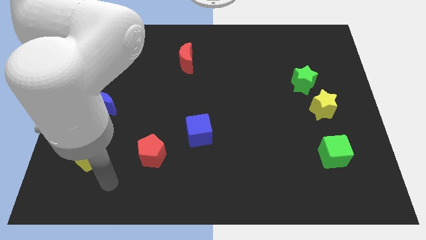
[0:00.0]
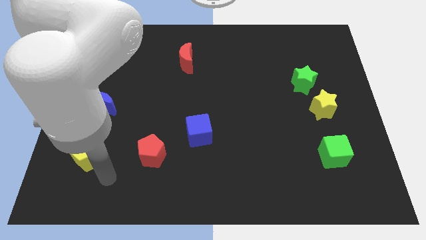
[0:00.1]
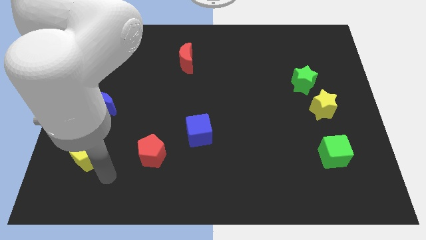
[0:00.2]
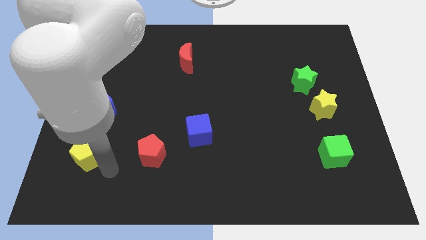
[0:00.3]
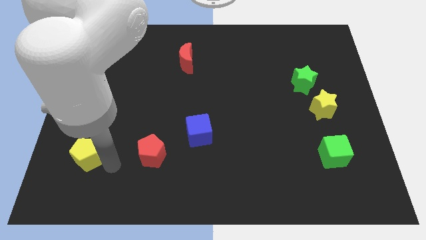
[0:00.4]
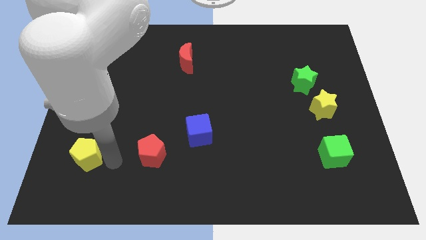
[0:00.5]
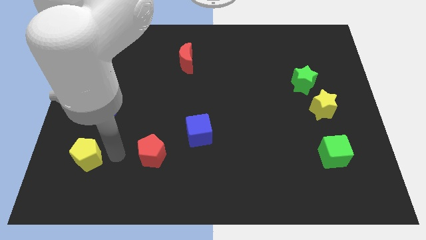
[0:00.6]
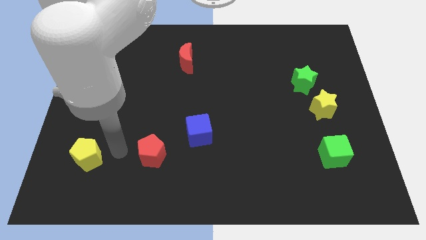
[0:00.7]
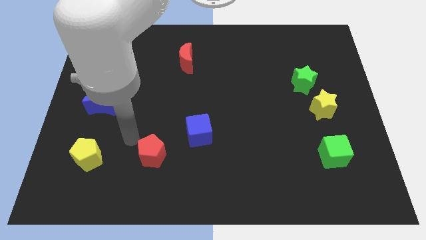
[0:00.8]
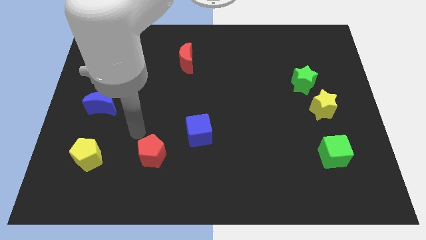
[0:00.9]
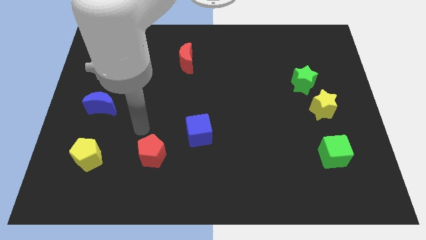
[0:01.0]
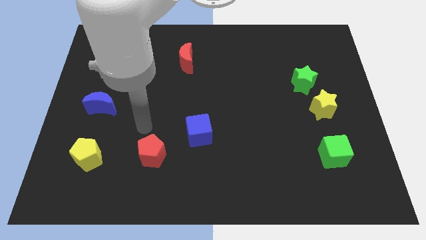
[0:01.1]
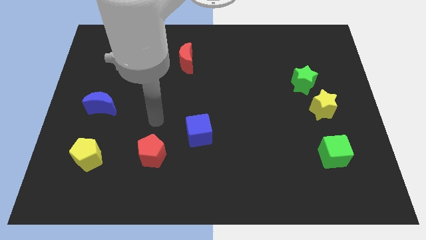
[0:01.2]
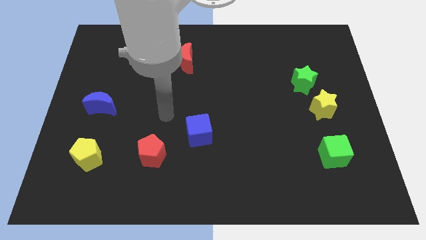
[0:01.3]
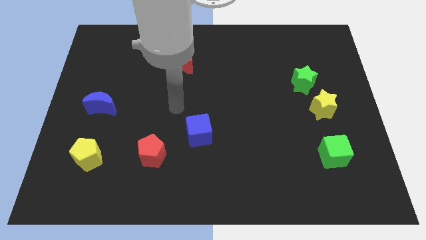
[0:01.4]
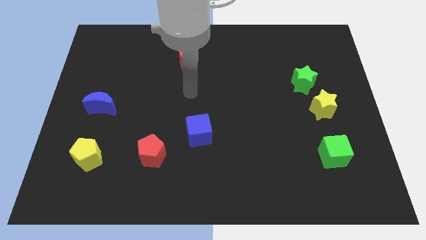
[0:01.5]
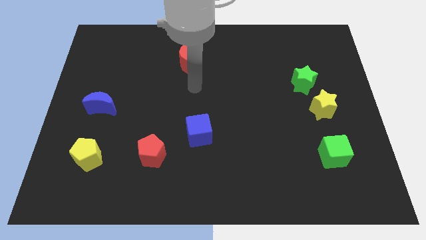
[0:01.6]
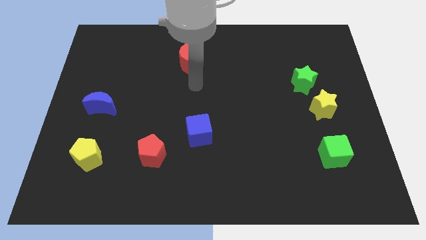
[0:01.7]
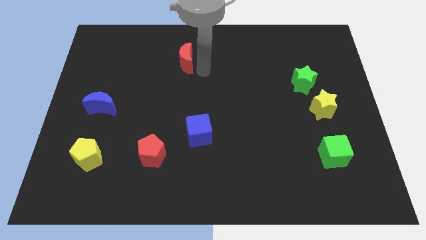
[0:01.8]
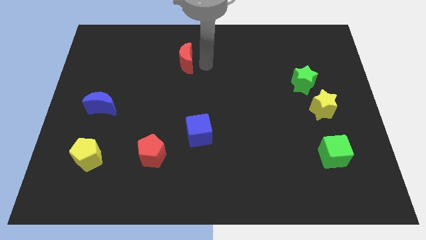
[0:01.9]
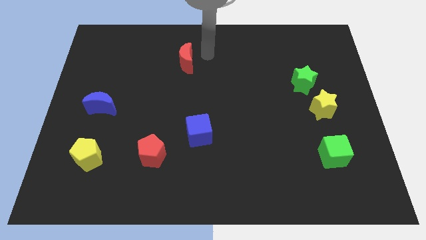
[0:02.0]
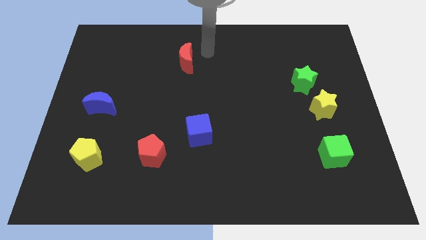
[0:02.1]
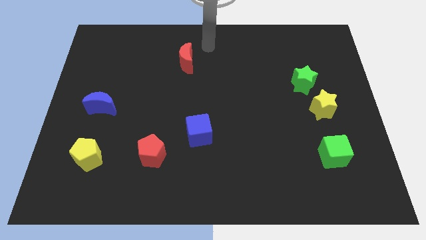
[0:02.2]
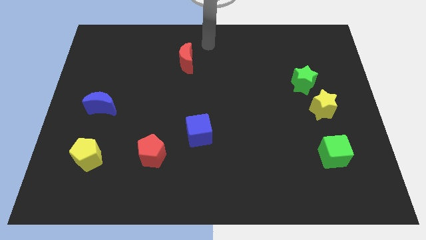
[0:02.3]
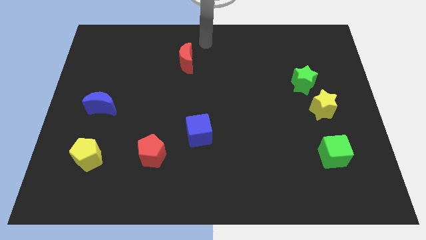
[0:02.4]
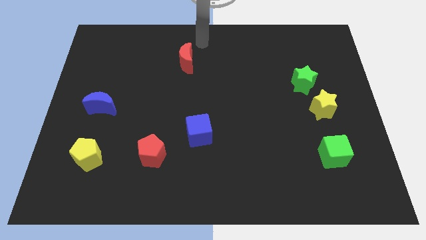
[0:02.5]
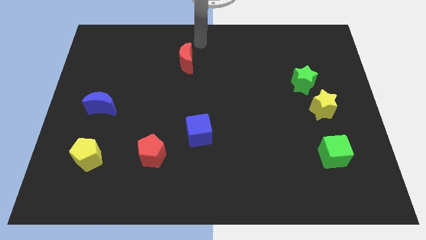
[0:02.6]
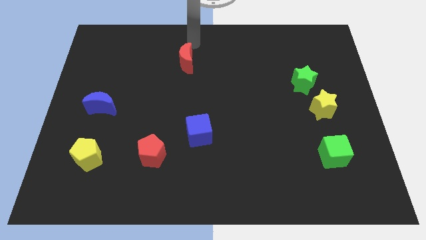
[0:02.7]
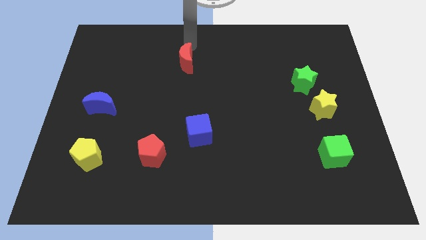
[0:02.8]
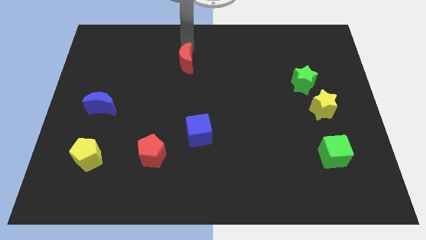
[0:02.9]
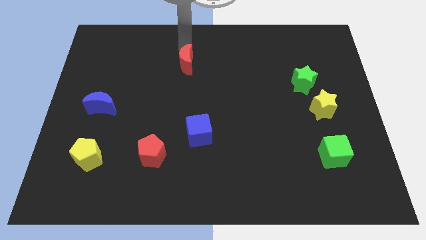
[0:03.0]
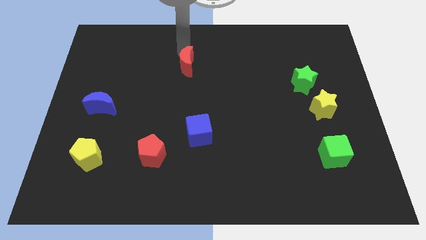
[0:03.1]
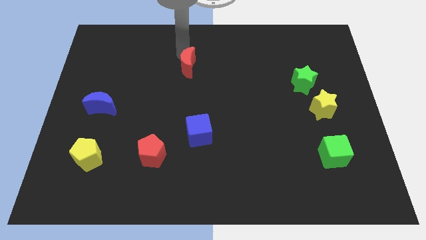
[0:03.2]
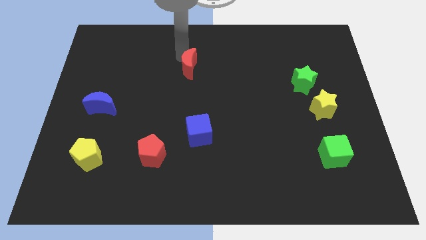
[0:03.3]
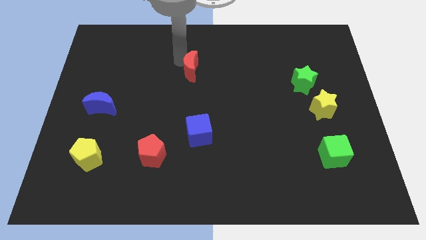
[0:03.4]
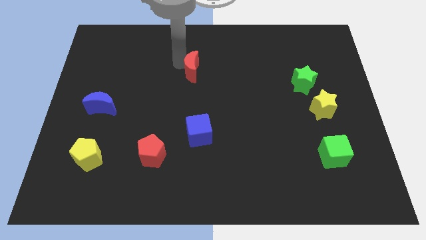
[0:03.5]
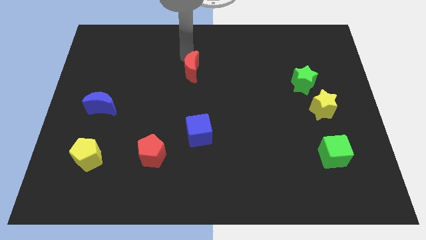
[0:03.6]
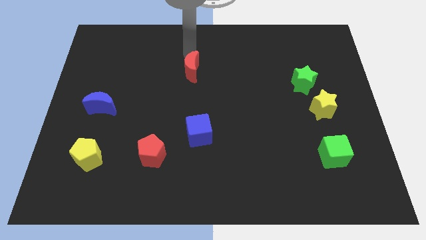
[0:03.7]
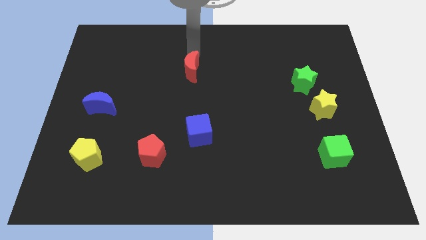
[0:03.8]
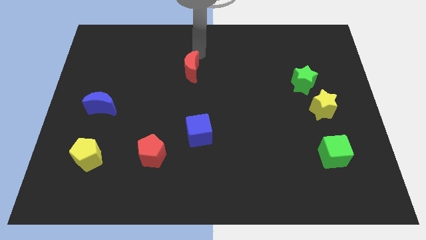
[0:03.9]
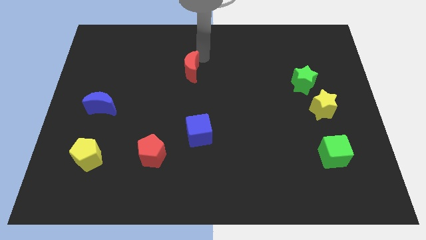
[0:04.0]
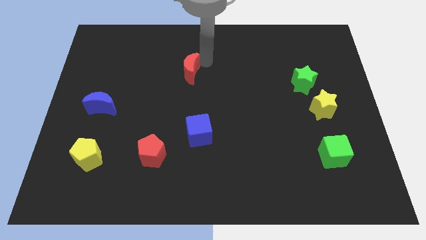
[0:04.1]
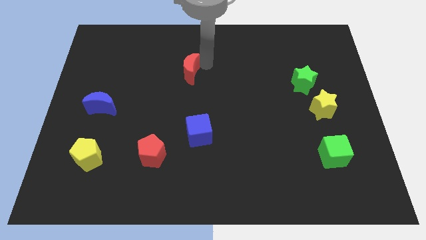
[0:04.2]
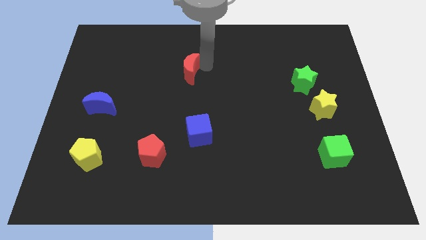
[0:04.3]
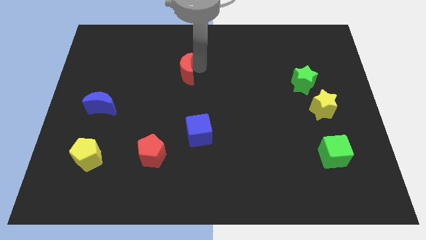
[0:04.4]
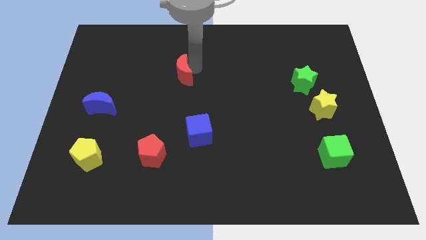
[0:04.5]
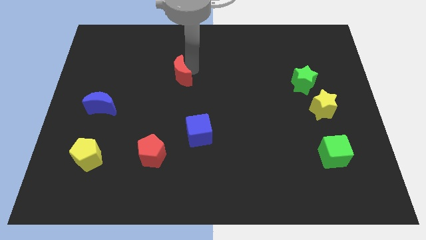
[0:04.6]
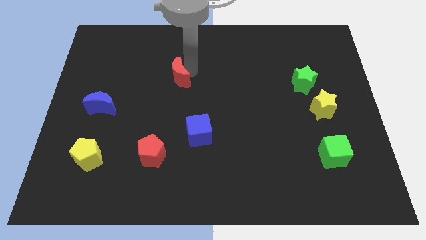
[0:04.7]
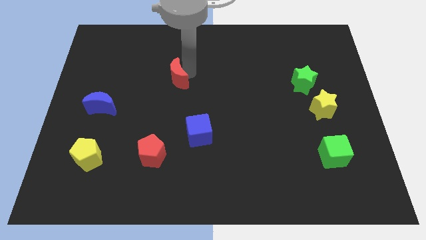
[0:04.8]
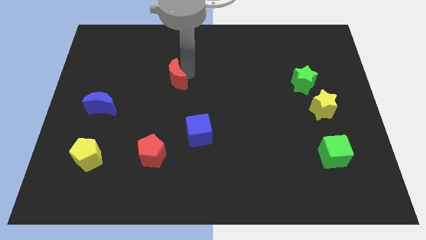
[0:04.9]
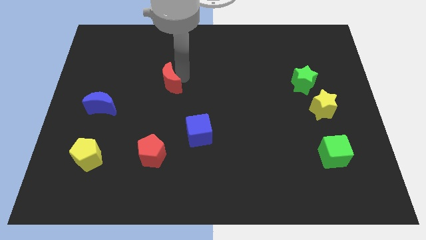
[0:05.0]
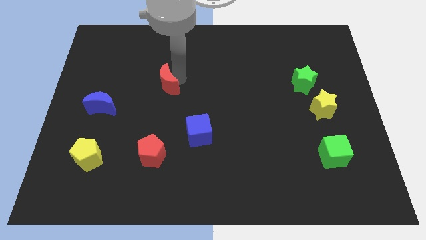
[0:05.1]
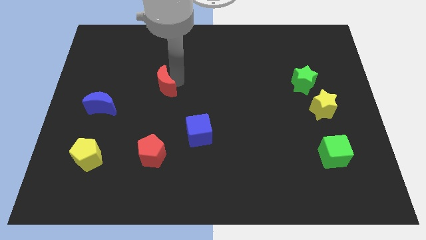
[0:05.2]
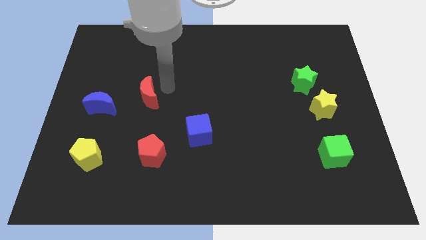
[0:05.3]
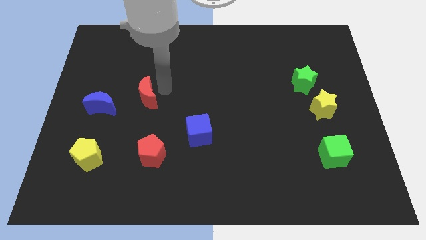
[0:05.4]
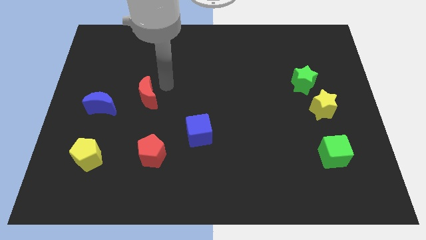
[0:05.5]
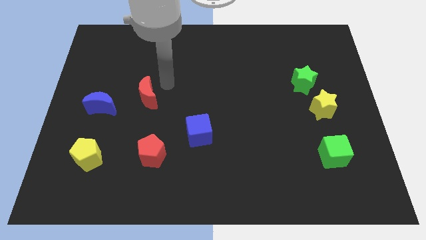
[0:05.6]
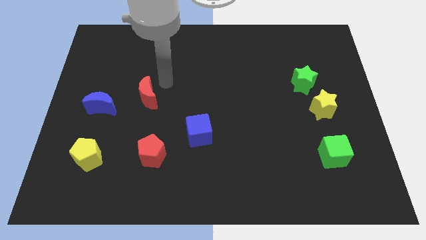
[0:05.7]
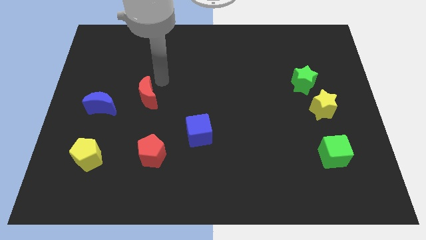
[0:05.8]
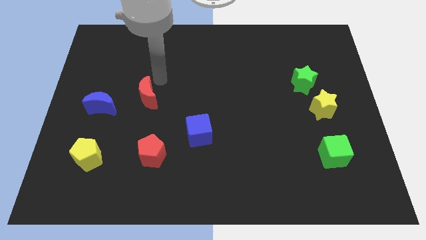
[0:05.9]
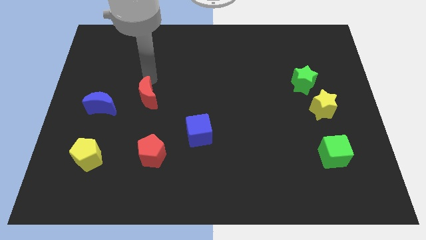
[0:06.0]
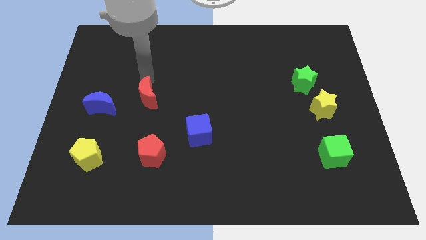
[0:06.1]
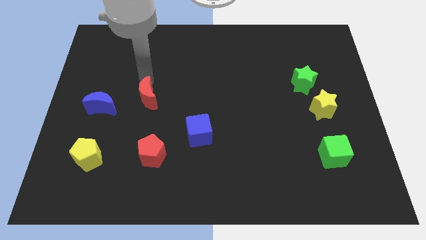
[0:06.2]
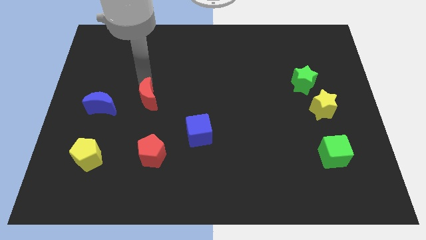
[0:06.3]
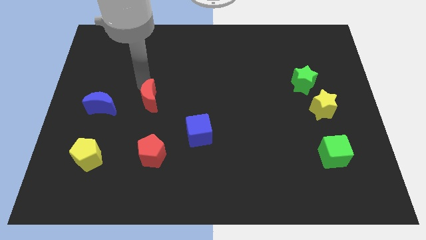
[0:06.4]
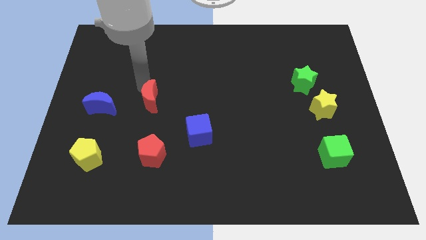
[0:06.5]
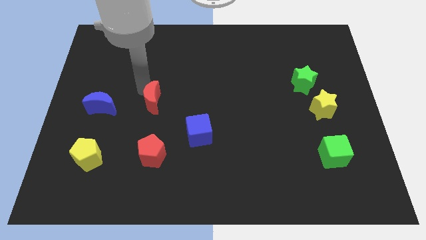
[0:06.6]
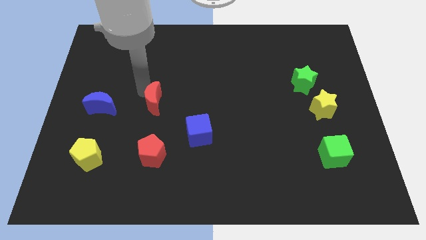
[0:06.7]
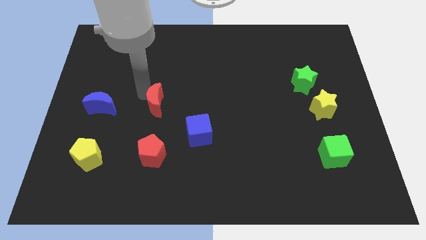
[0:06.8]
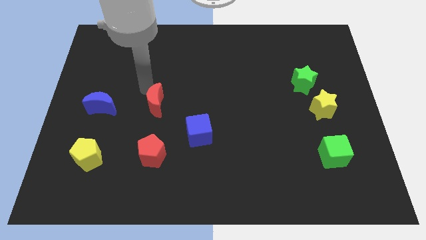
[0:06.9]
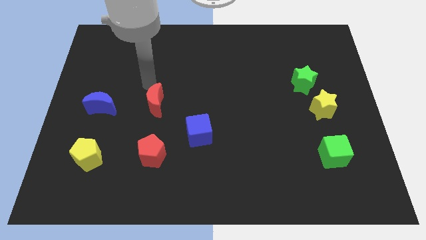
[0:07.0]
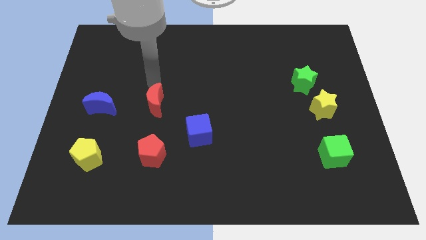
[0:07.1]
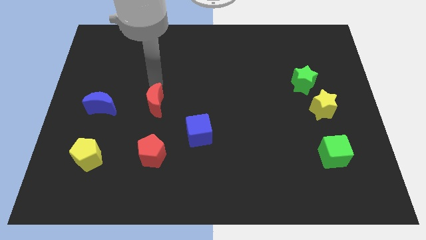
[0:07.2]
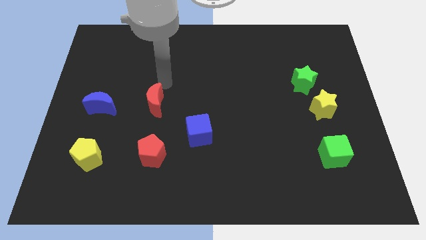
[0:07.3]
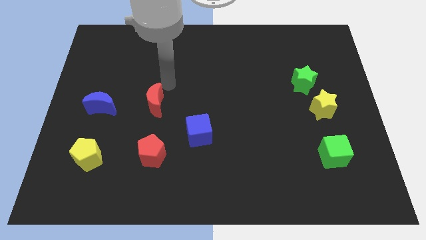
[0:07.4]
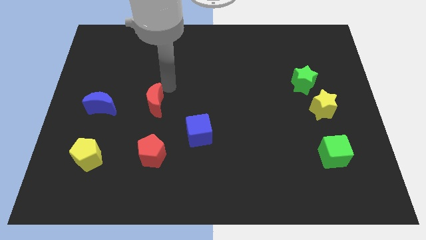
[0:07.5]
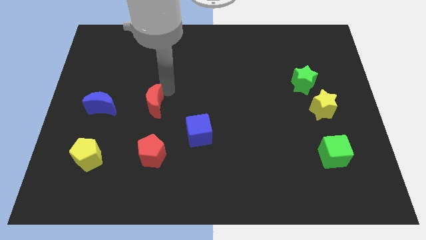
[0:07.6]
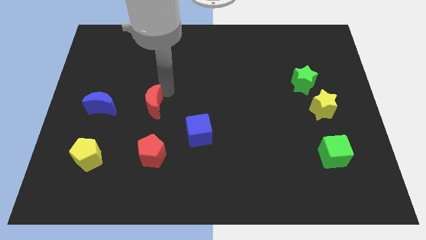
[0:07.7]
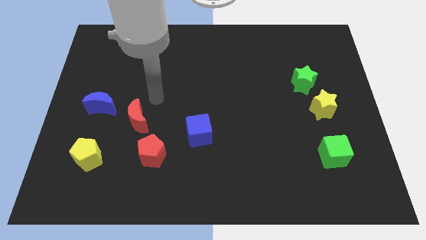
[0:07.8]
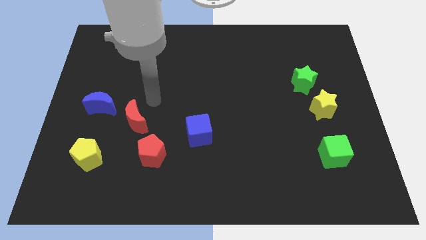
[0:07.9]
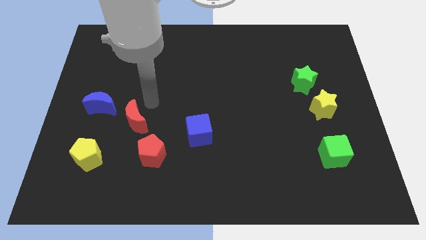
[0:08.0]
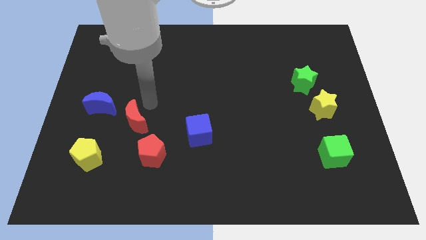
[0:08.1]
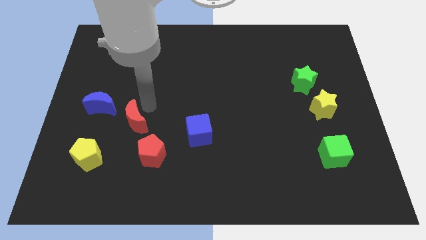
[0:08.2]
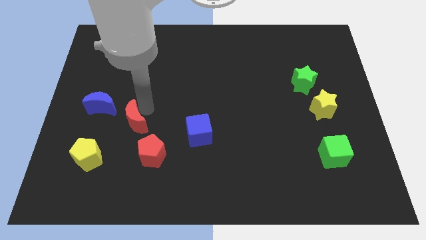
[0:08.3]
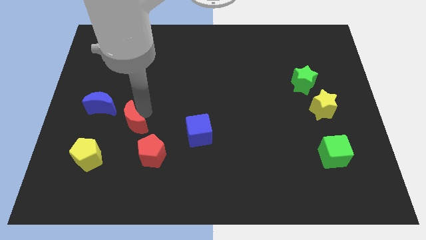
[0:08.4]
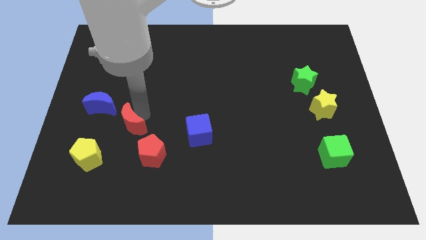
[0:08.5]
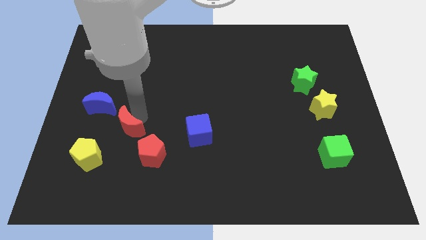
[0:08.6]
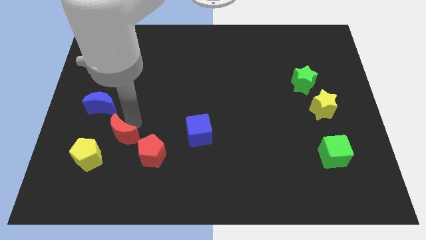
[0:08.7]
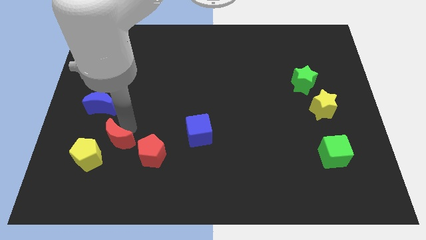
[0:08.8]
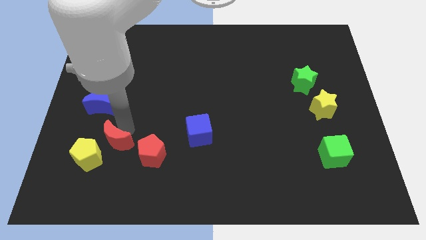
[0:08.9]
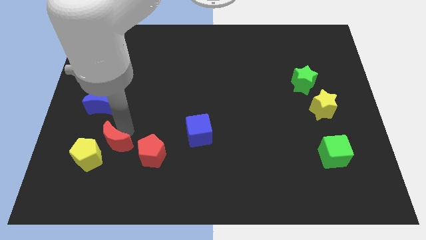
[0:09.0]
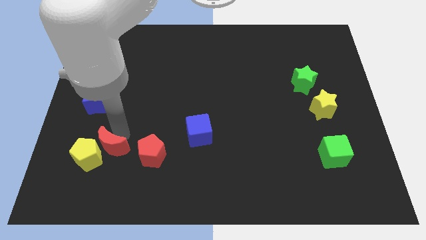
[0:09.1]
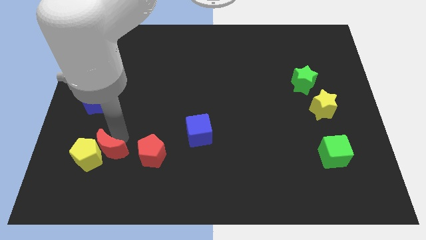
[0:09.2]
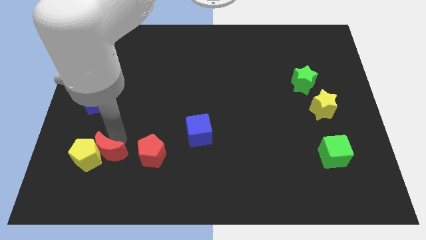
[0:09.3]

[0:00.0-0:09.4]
move the red moon close to the yellow pentagon
